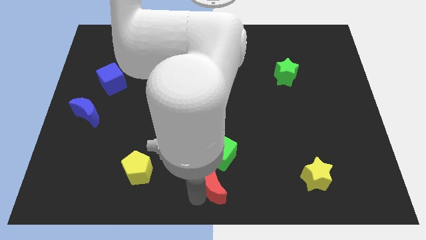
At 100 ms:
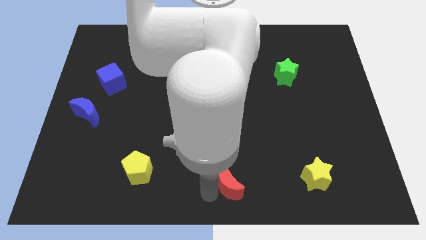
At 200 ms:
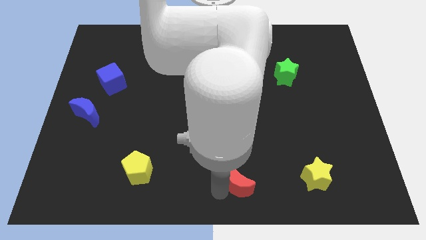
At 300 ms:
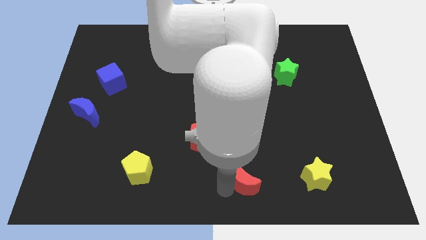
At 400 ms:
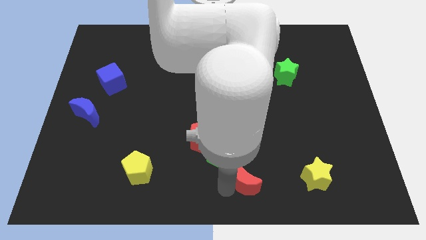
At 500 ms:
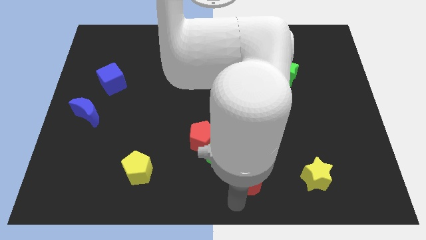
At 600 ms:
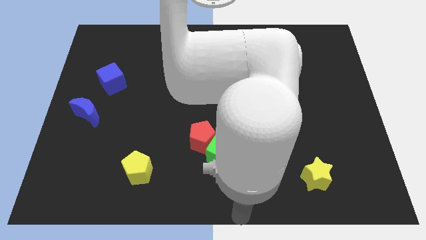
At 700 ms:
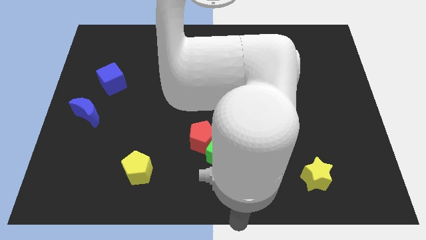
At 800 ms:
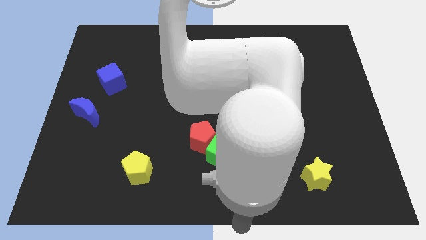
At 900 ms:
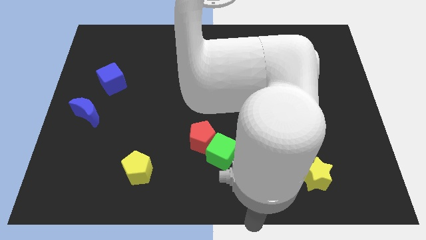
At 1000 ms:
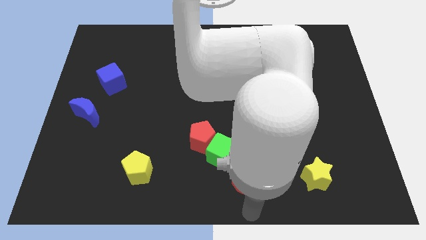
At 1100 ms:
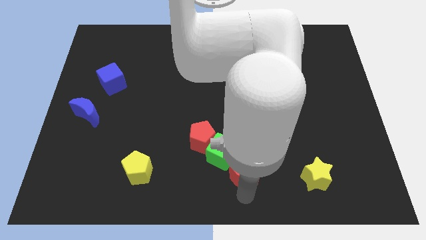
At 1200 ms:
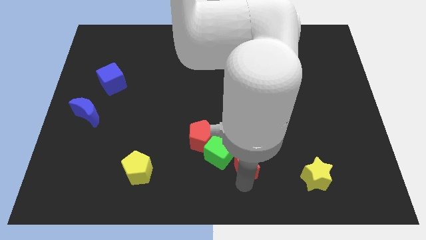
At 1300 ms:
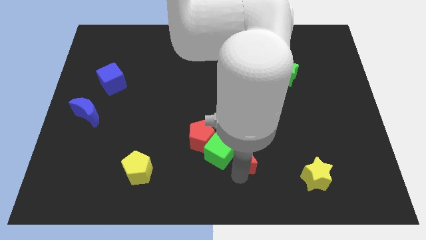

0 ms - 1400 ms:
push the red moon into the green cube

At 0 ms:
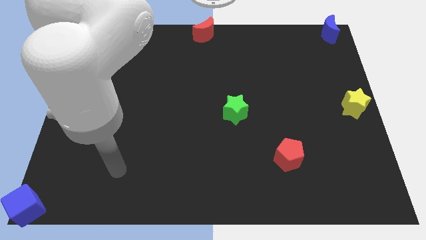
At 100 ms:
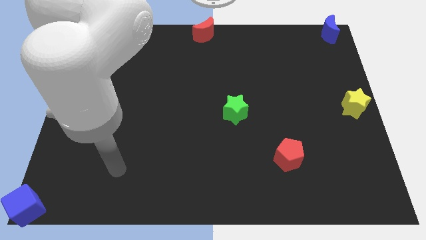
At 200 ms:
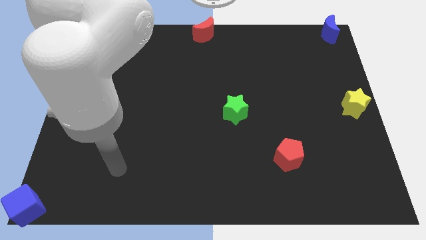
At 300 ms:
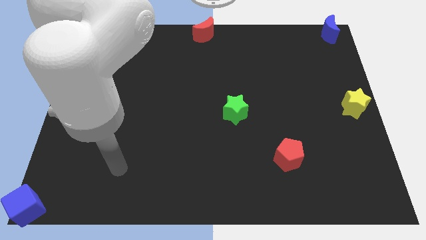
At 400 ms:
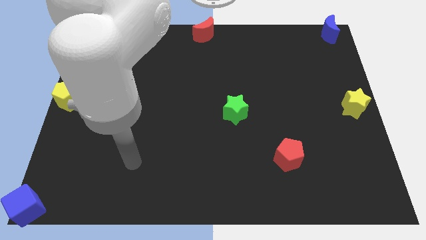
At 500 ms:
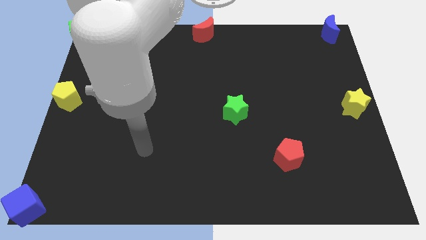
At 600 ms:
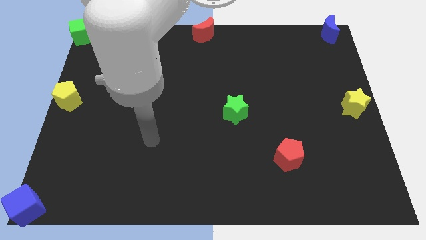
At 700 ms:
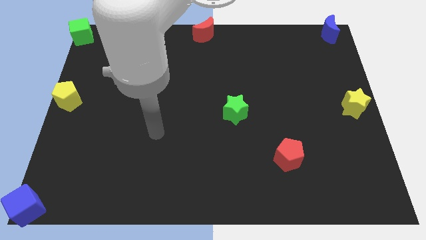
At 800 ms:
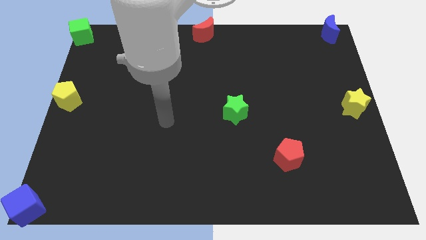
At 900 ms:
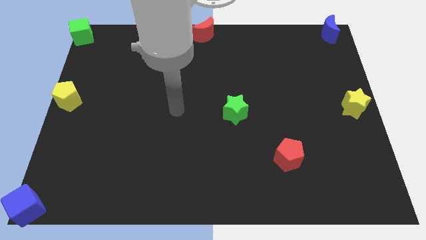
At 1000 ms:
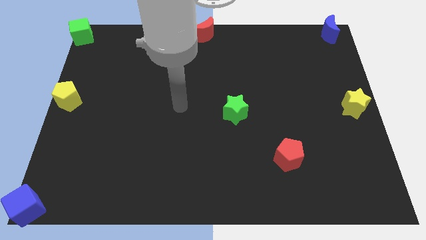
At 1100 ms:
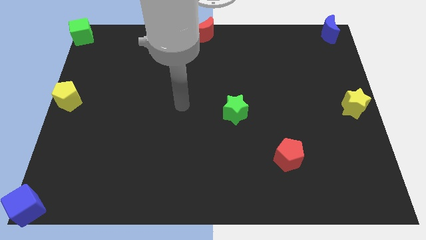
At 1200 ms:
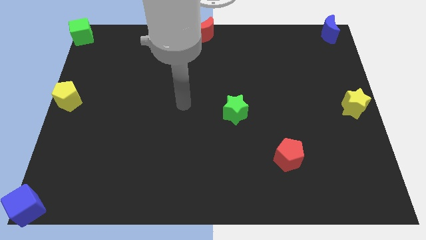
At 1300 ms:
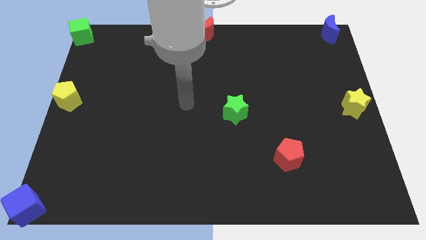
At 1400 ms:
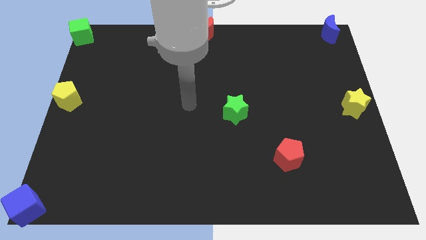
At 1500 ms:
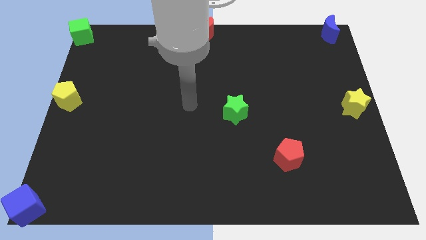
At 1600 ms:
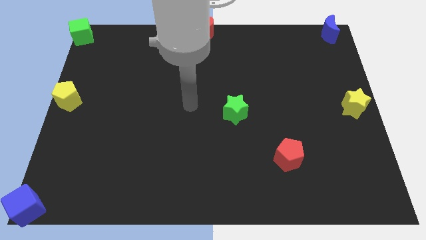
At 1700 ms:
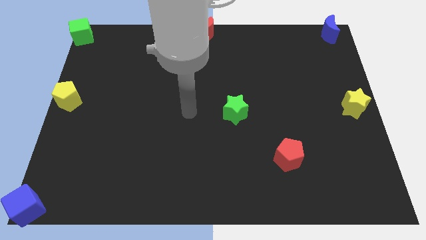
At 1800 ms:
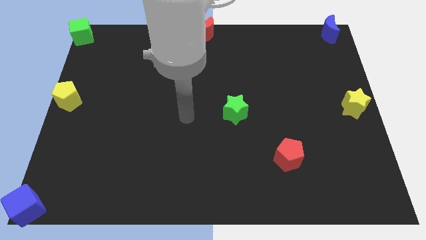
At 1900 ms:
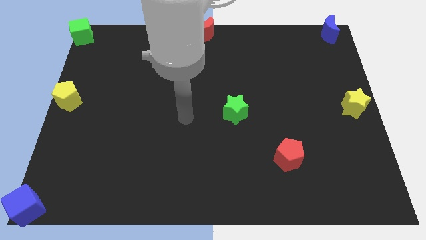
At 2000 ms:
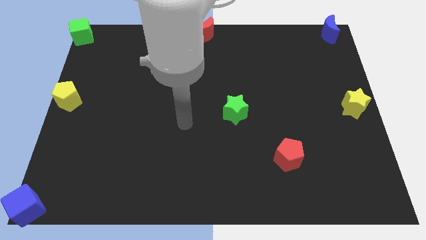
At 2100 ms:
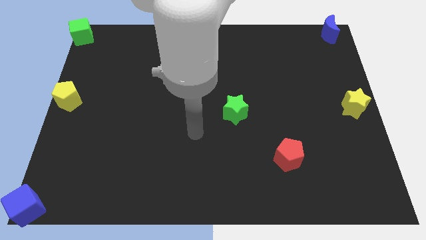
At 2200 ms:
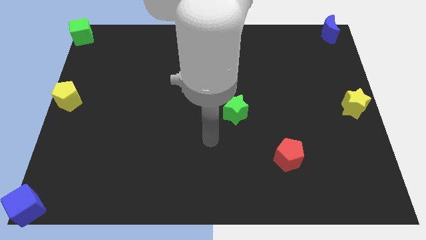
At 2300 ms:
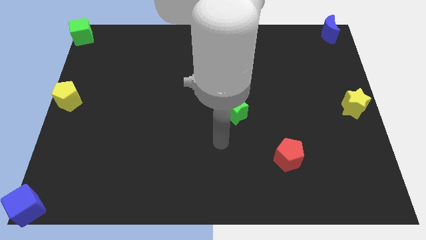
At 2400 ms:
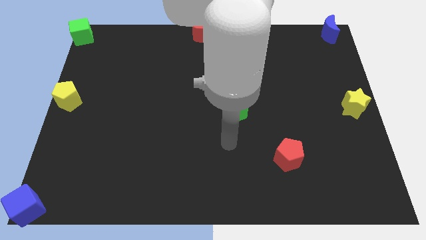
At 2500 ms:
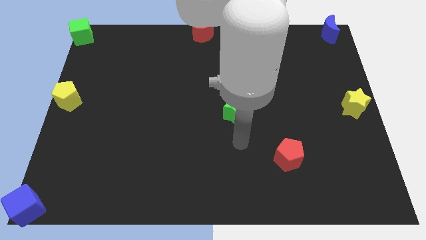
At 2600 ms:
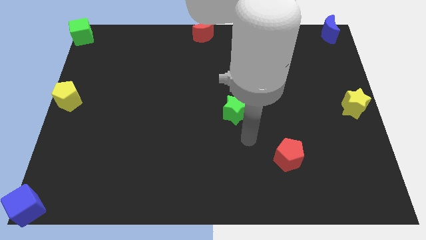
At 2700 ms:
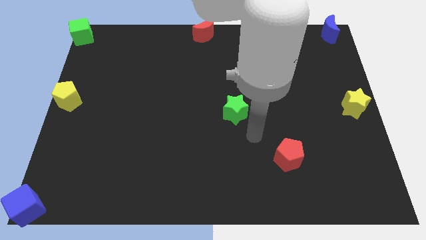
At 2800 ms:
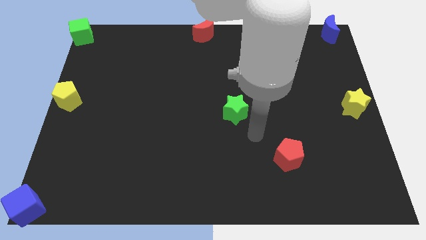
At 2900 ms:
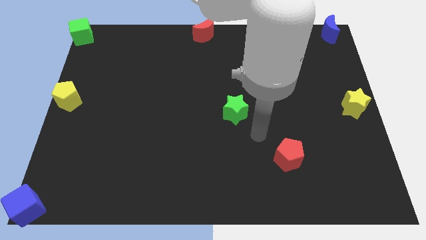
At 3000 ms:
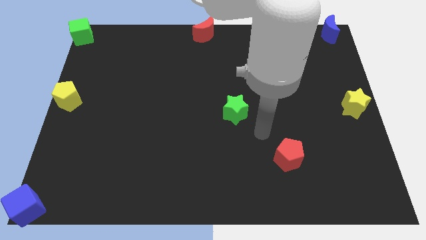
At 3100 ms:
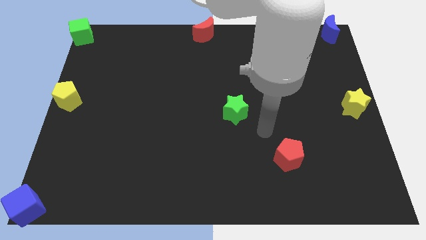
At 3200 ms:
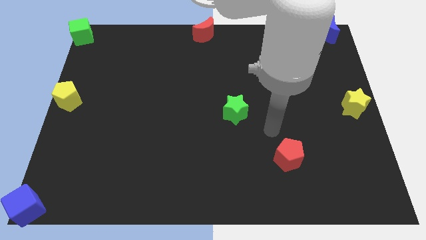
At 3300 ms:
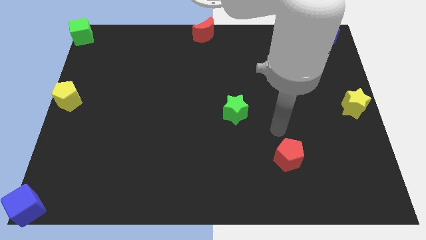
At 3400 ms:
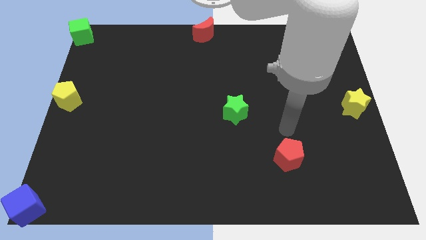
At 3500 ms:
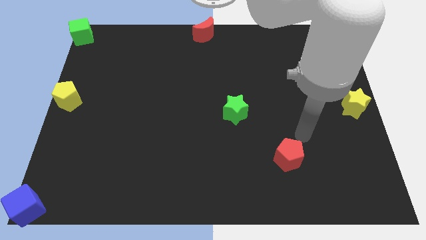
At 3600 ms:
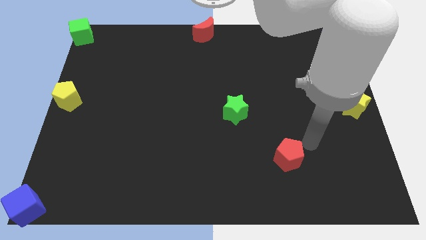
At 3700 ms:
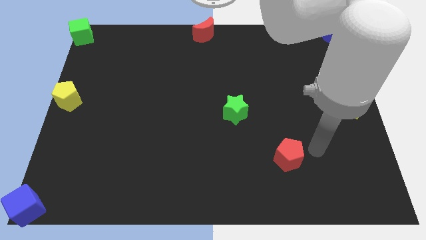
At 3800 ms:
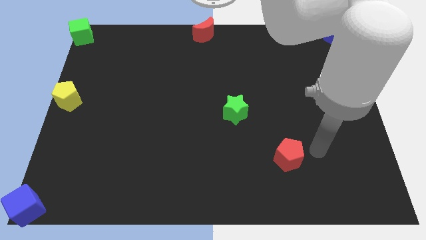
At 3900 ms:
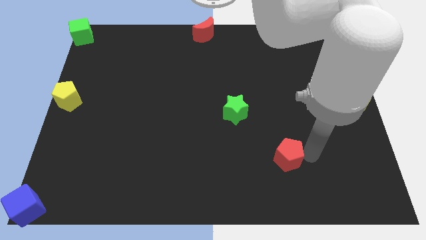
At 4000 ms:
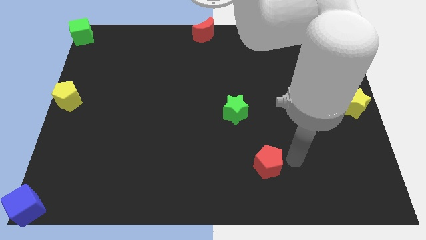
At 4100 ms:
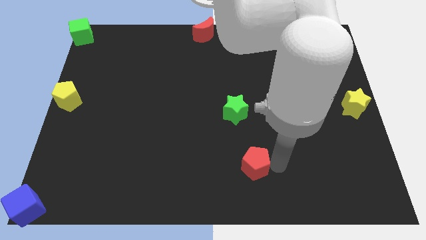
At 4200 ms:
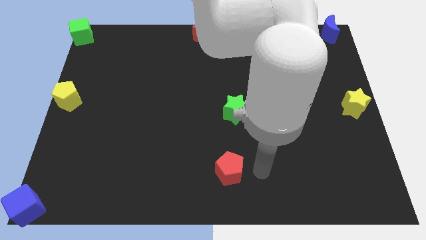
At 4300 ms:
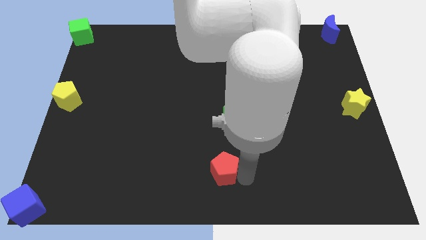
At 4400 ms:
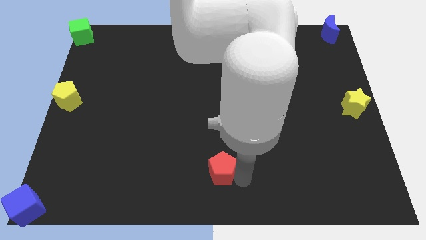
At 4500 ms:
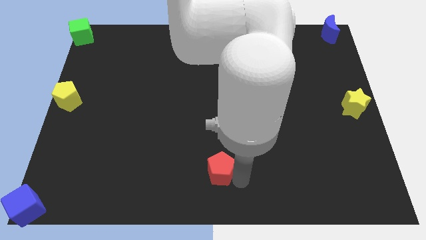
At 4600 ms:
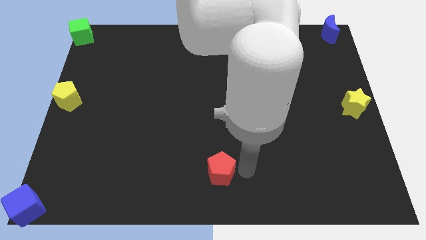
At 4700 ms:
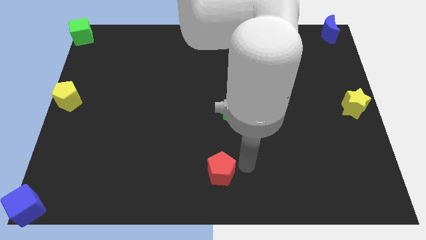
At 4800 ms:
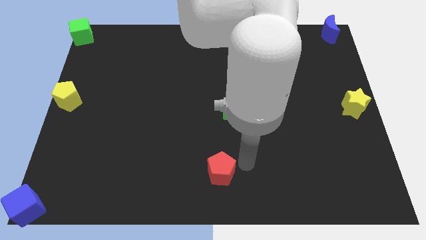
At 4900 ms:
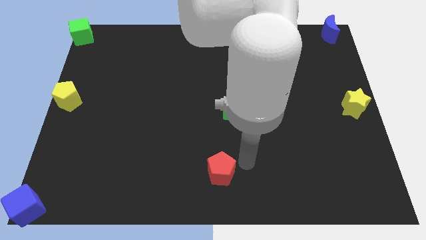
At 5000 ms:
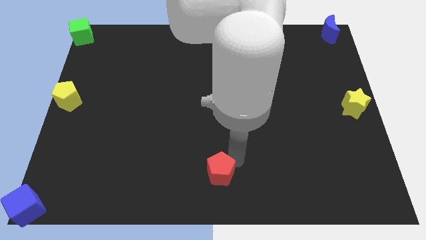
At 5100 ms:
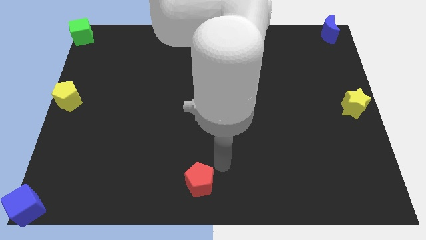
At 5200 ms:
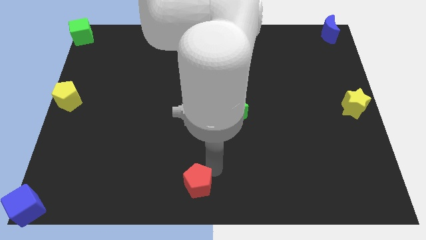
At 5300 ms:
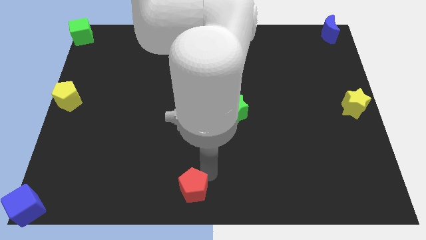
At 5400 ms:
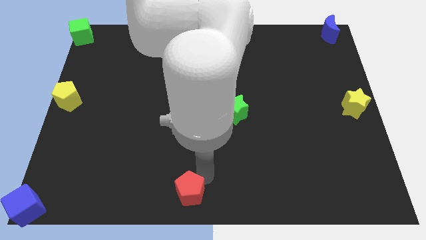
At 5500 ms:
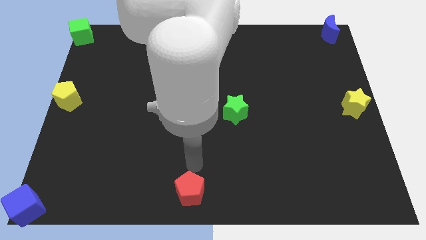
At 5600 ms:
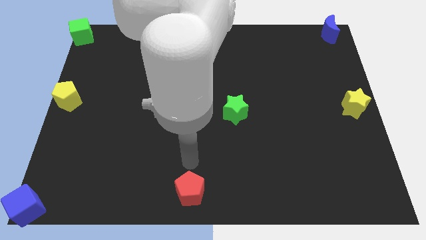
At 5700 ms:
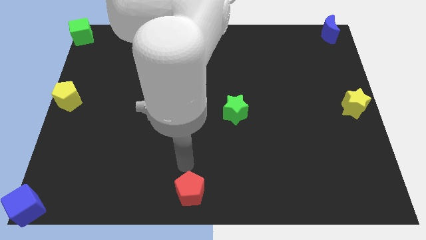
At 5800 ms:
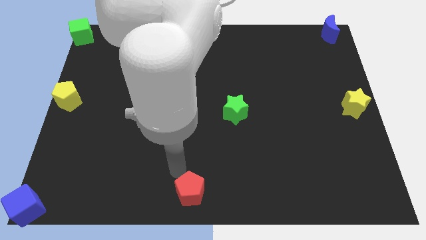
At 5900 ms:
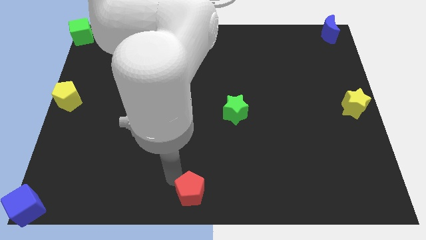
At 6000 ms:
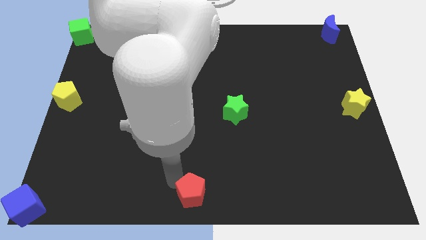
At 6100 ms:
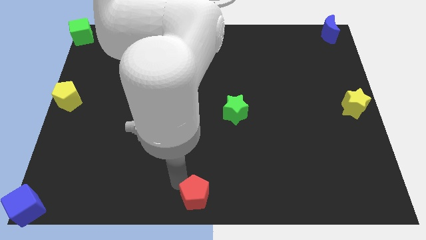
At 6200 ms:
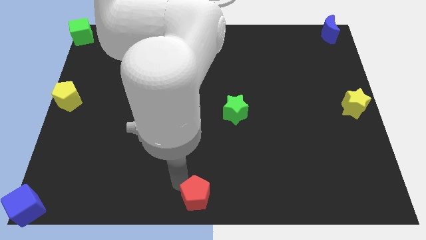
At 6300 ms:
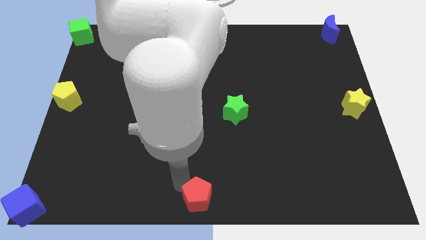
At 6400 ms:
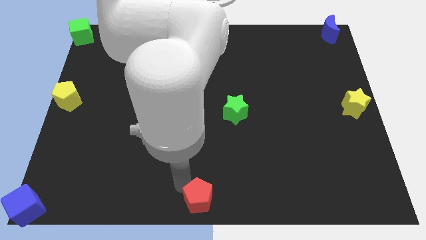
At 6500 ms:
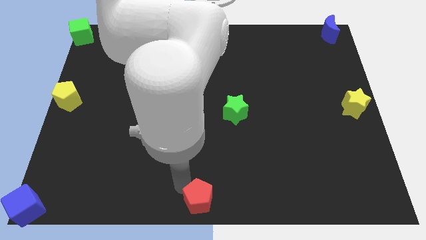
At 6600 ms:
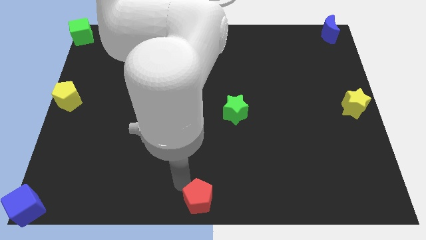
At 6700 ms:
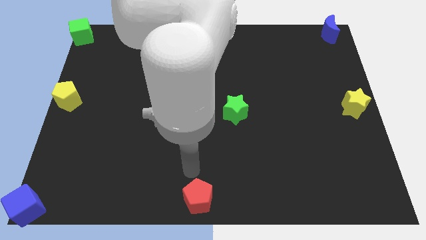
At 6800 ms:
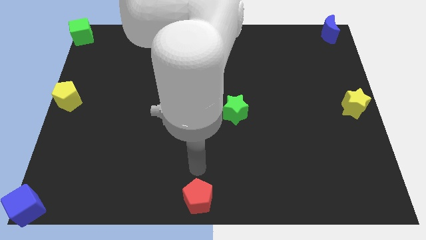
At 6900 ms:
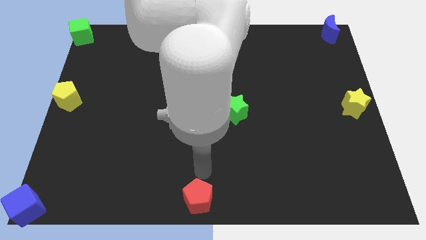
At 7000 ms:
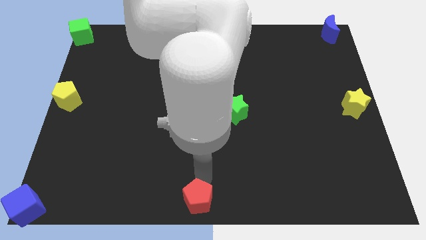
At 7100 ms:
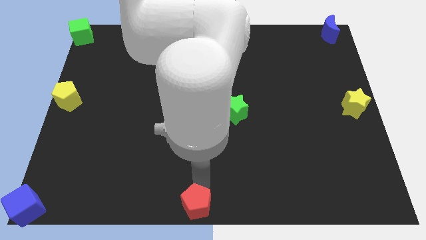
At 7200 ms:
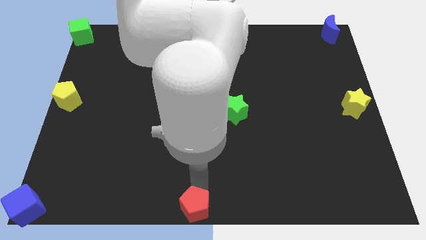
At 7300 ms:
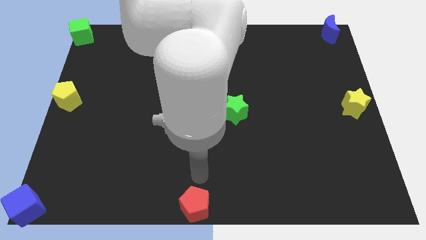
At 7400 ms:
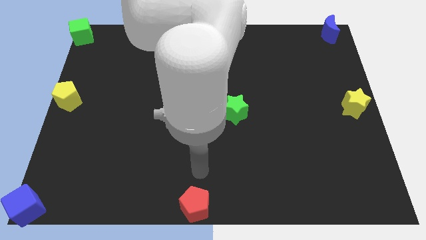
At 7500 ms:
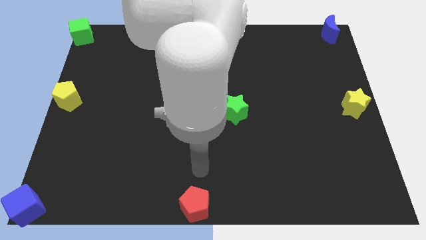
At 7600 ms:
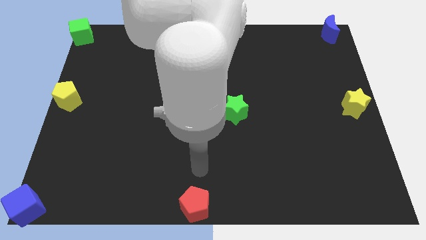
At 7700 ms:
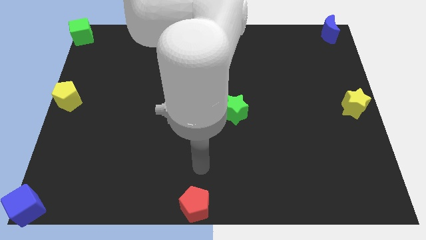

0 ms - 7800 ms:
move red pentagon to the bottom middle of the board
